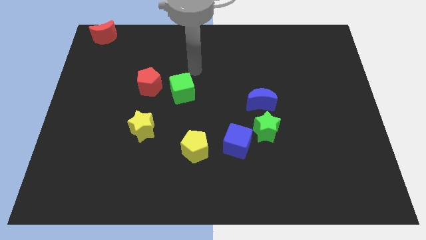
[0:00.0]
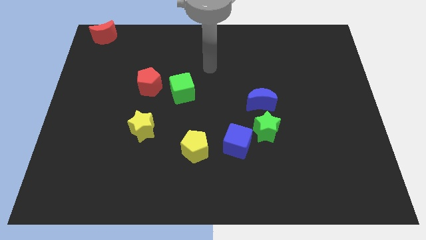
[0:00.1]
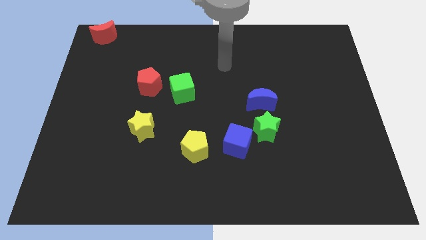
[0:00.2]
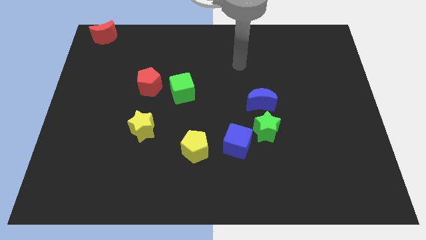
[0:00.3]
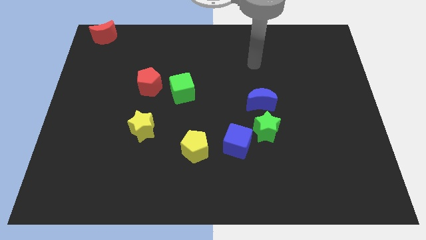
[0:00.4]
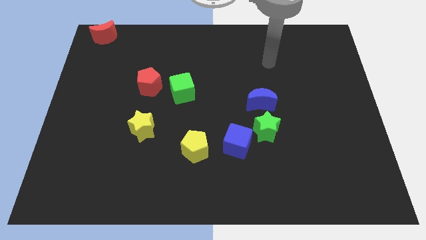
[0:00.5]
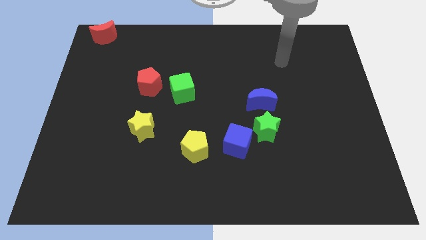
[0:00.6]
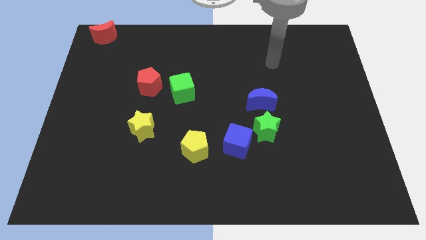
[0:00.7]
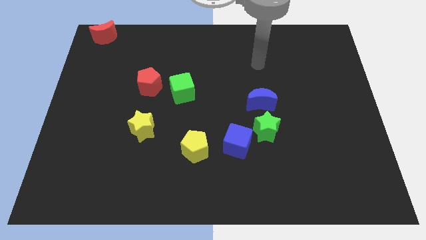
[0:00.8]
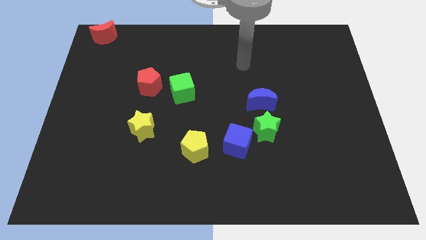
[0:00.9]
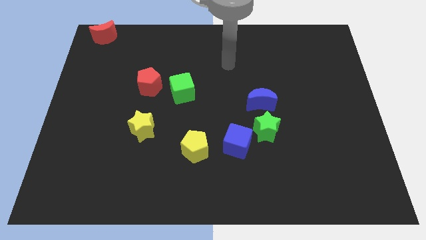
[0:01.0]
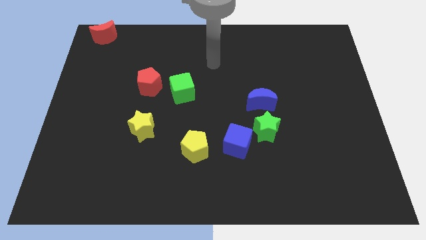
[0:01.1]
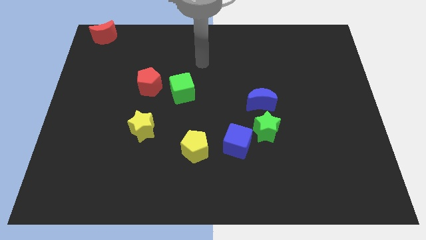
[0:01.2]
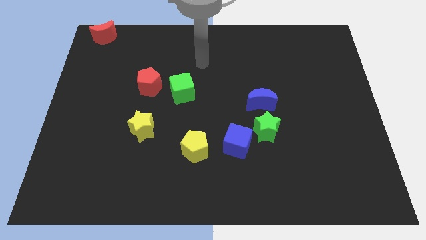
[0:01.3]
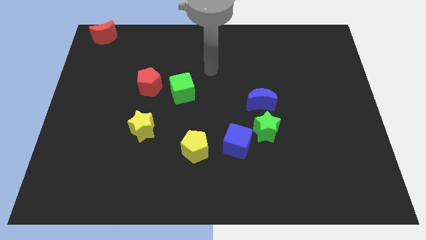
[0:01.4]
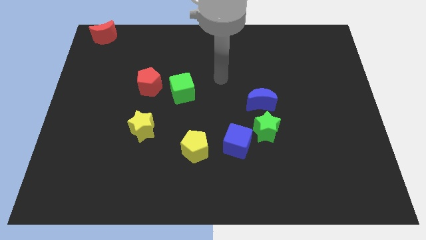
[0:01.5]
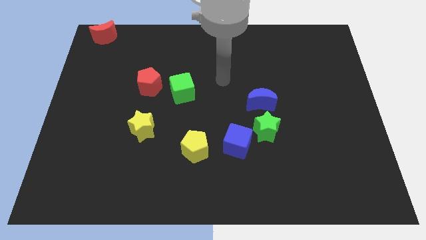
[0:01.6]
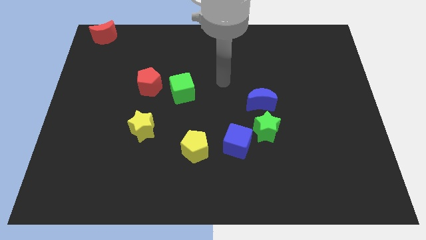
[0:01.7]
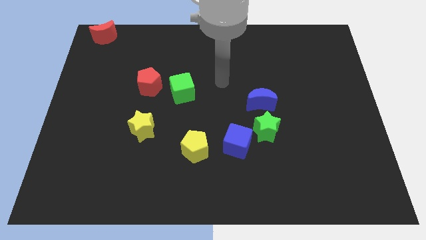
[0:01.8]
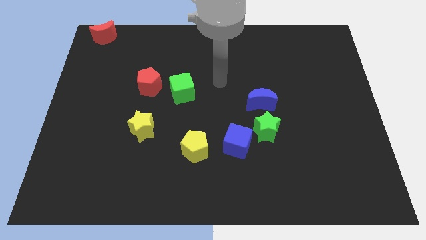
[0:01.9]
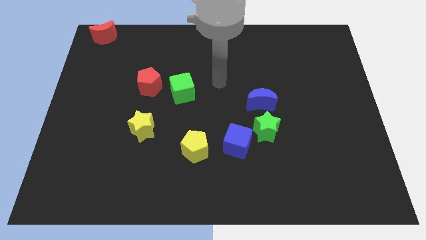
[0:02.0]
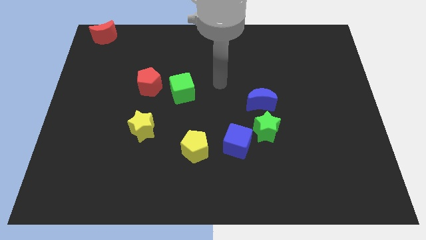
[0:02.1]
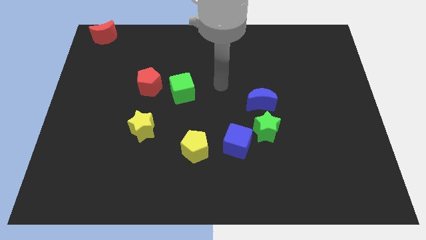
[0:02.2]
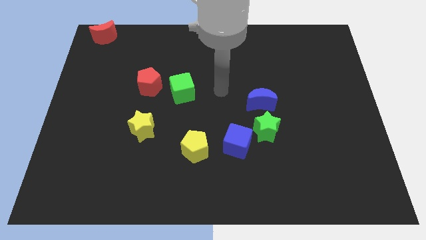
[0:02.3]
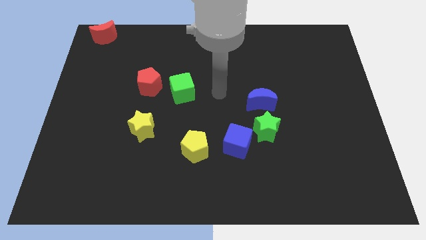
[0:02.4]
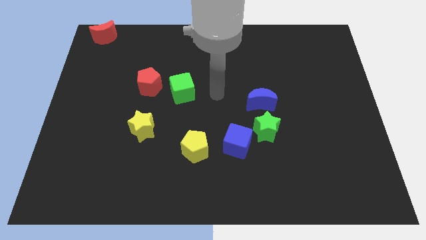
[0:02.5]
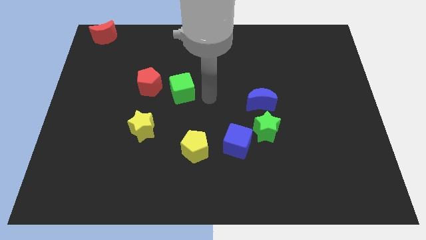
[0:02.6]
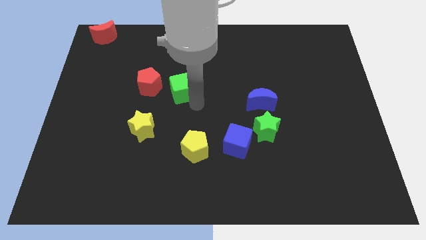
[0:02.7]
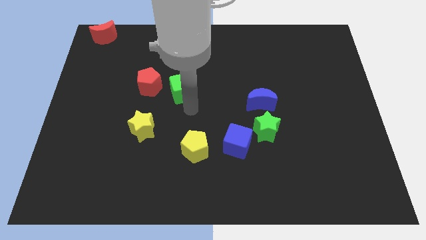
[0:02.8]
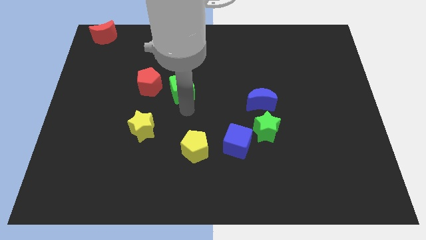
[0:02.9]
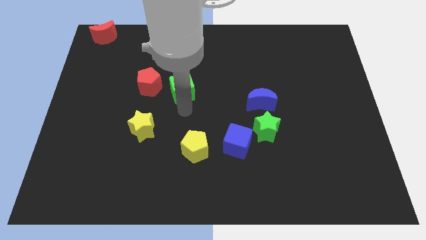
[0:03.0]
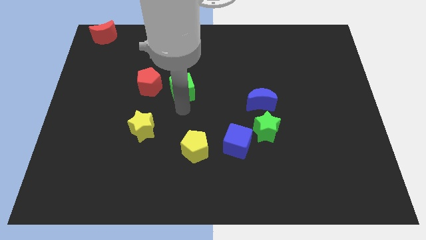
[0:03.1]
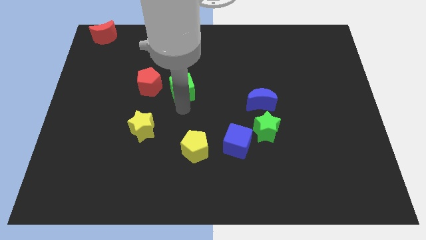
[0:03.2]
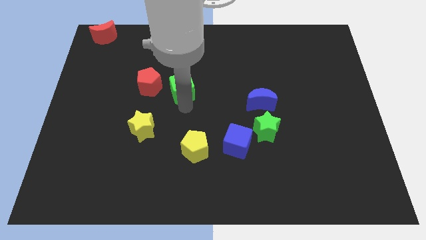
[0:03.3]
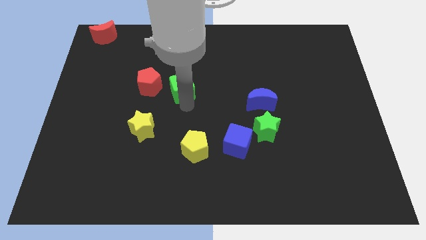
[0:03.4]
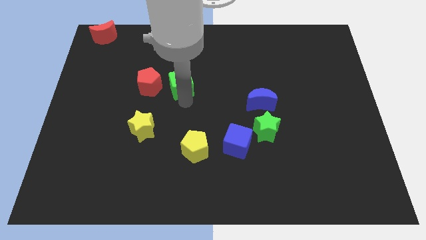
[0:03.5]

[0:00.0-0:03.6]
place arm below green cube

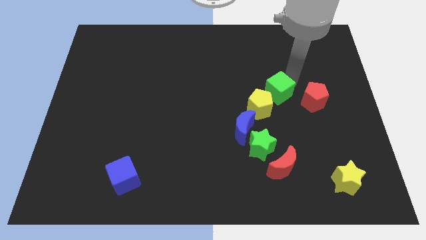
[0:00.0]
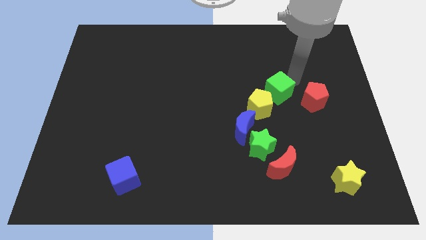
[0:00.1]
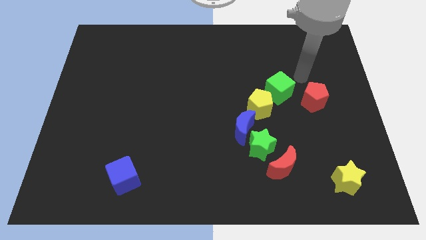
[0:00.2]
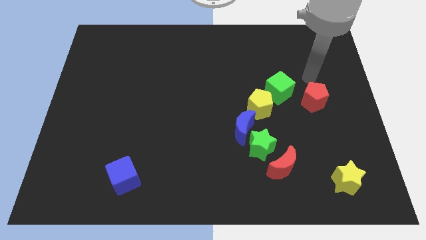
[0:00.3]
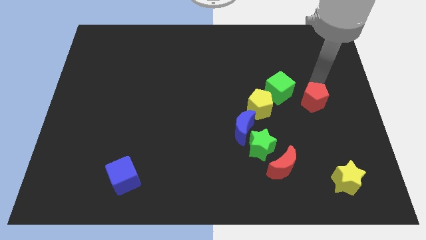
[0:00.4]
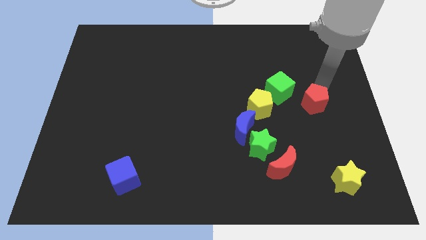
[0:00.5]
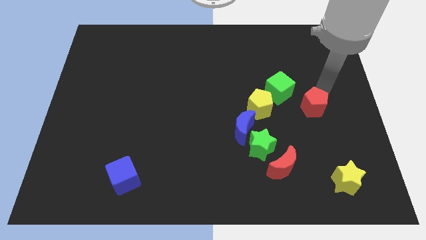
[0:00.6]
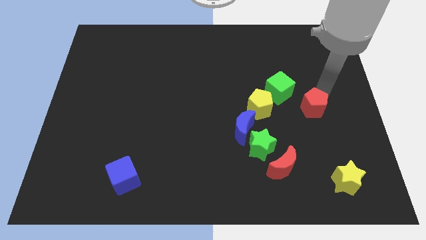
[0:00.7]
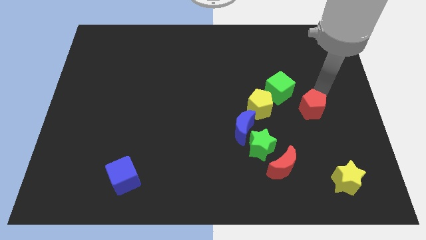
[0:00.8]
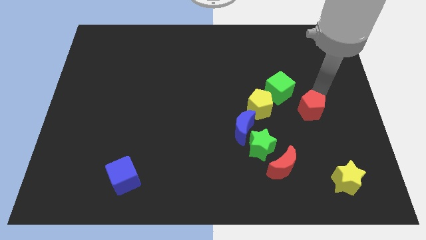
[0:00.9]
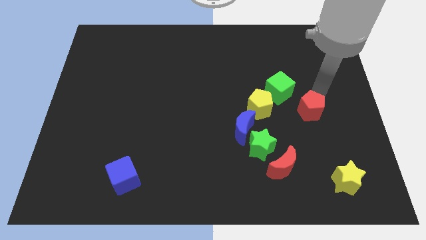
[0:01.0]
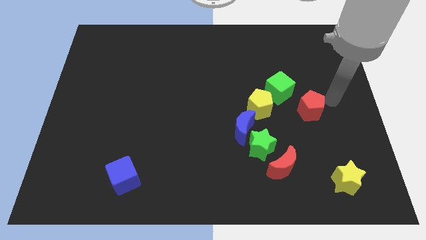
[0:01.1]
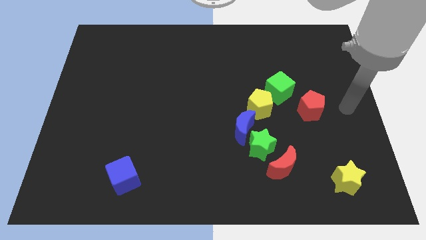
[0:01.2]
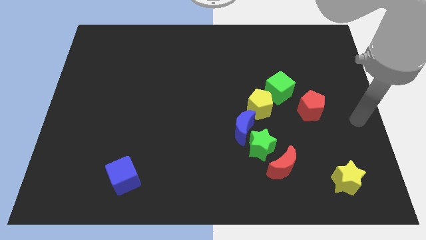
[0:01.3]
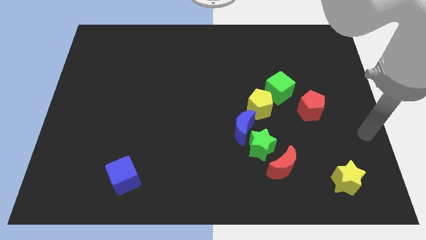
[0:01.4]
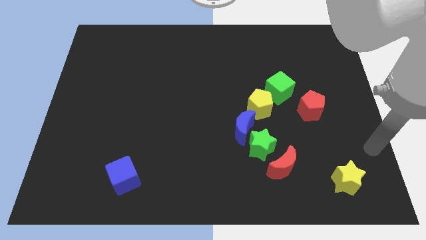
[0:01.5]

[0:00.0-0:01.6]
slightly push the red pentagon towards green cube

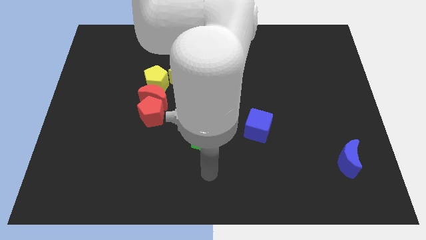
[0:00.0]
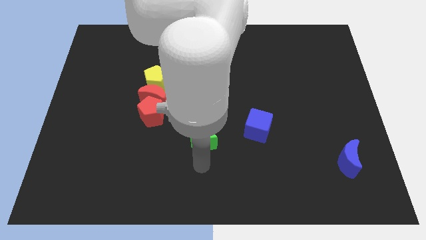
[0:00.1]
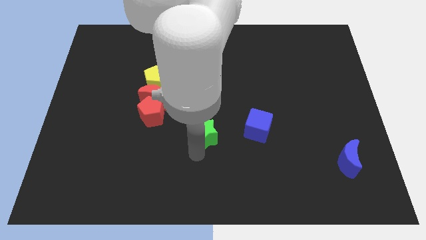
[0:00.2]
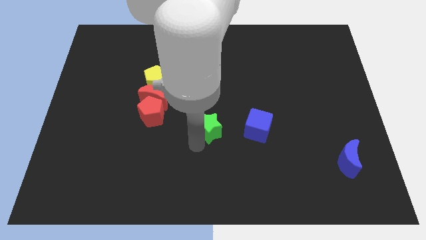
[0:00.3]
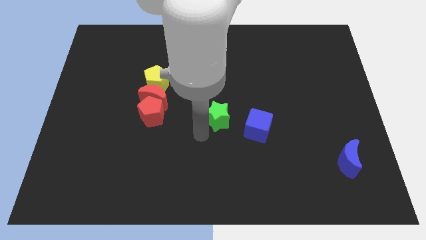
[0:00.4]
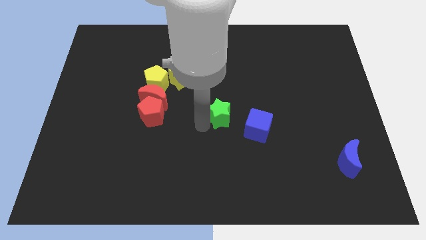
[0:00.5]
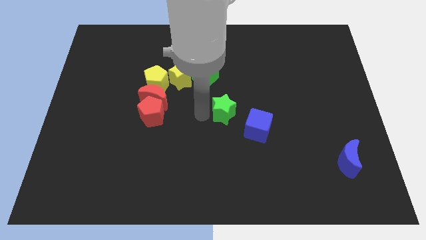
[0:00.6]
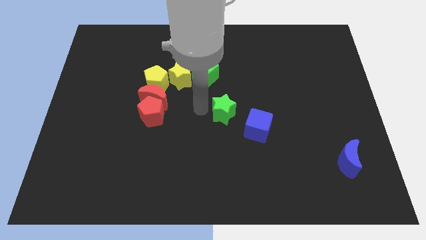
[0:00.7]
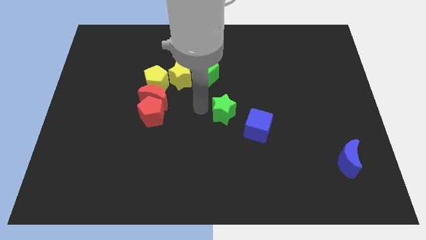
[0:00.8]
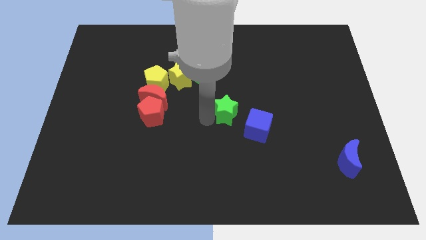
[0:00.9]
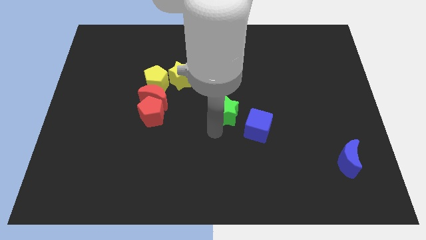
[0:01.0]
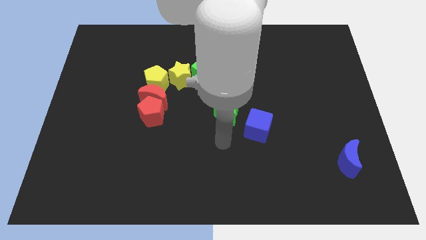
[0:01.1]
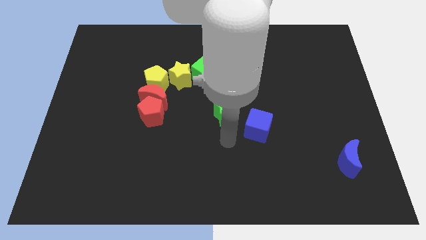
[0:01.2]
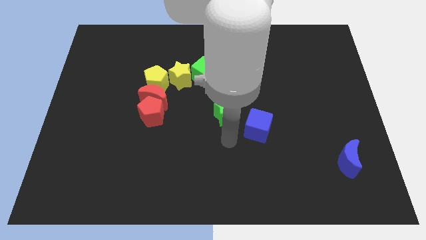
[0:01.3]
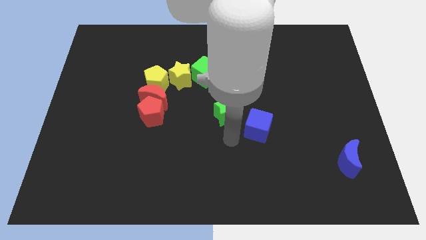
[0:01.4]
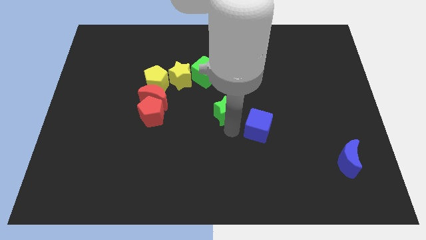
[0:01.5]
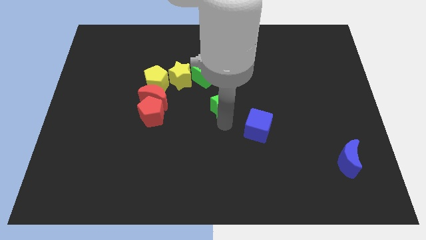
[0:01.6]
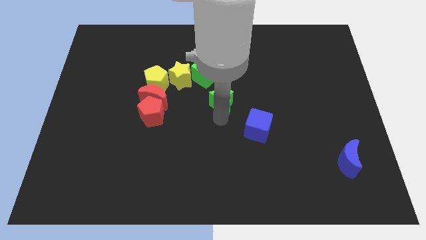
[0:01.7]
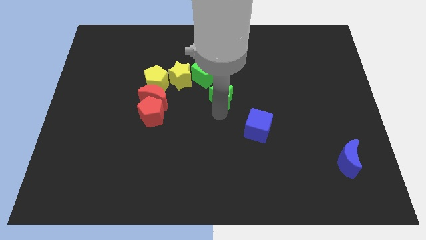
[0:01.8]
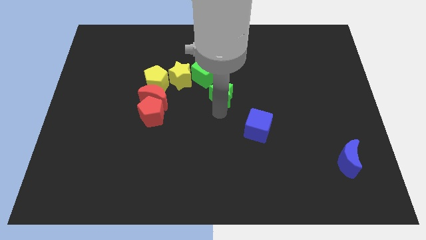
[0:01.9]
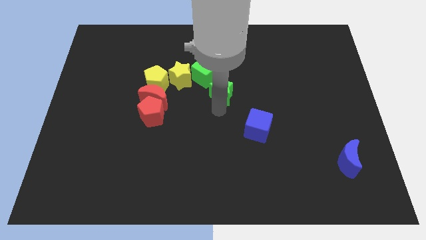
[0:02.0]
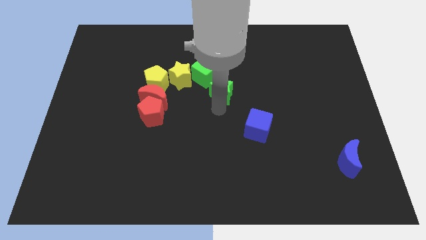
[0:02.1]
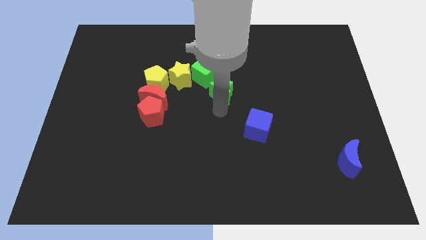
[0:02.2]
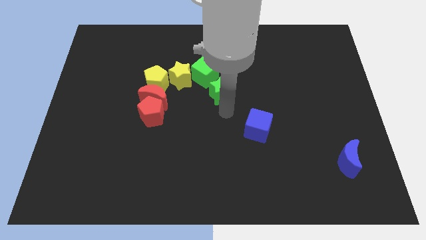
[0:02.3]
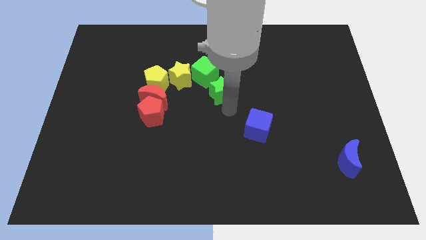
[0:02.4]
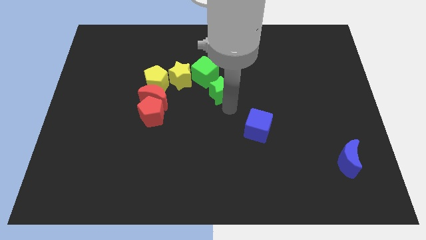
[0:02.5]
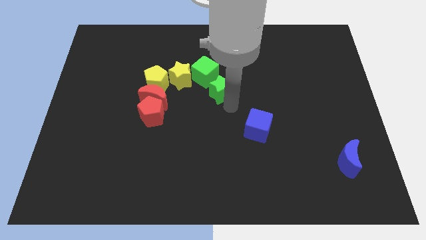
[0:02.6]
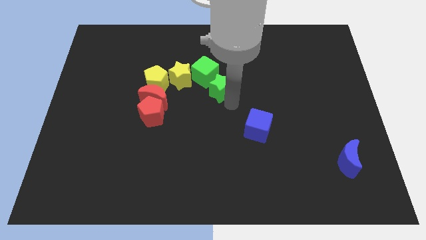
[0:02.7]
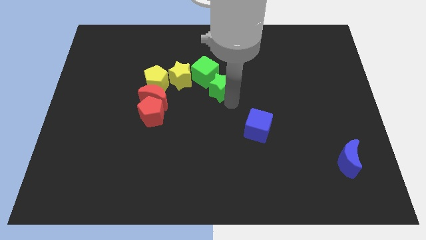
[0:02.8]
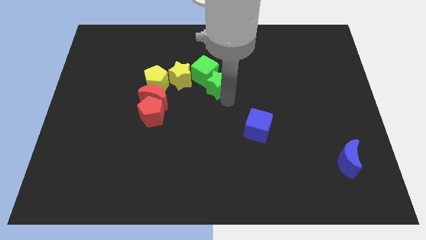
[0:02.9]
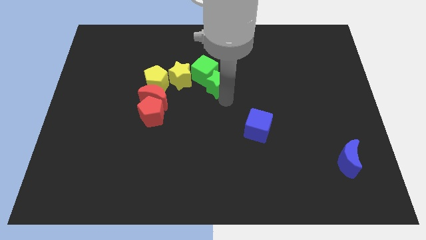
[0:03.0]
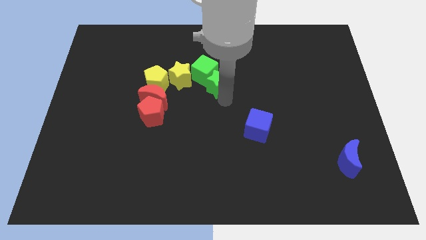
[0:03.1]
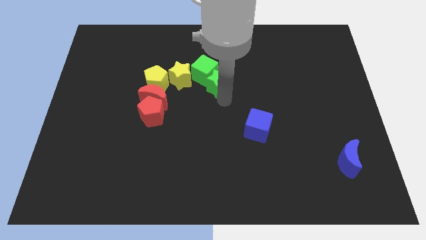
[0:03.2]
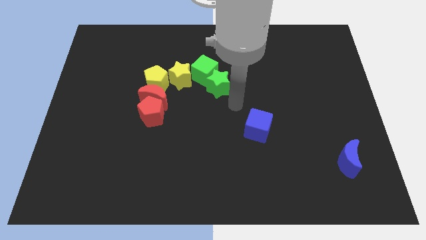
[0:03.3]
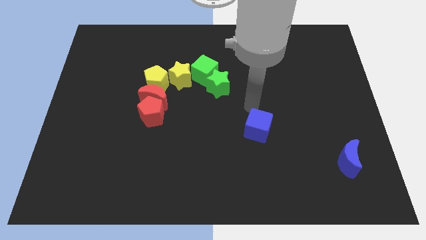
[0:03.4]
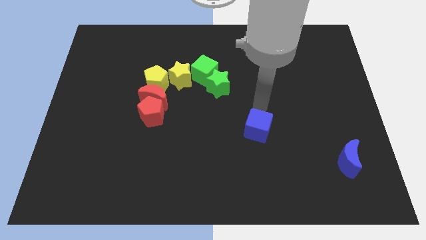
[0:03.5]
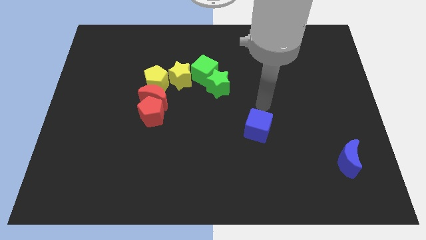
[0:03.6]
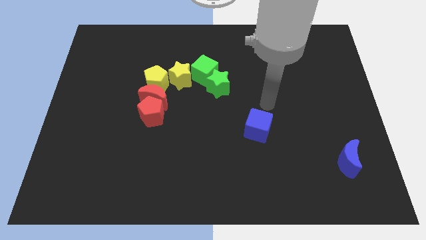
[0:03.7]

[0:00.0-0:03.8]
move the green star into the green cube towards the top center

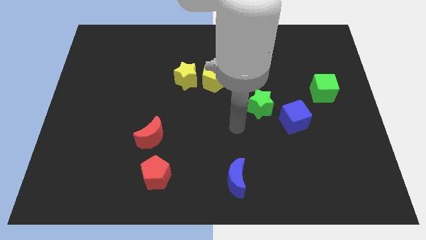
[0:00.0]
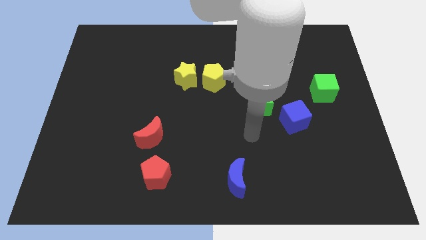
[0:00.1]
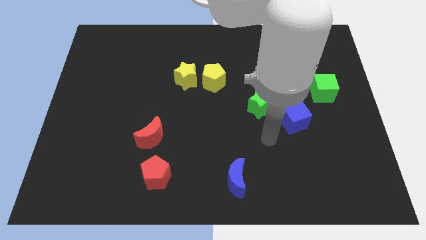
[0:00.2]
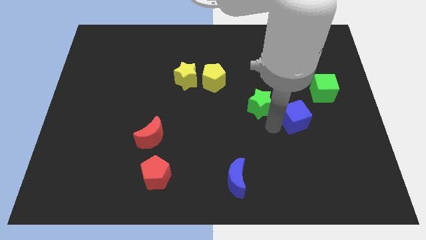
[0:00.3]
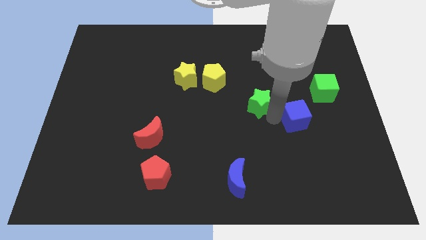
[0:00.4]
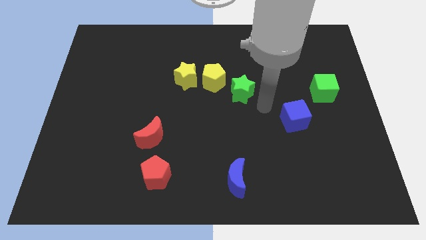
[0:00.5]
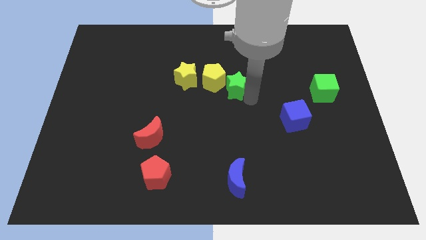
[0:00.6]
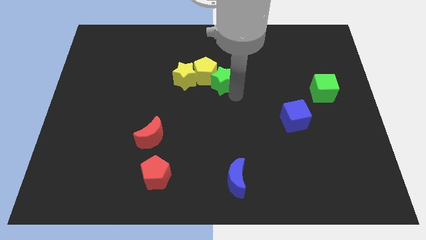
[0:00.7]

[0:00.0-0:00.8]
push the green star to the right of the yellow pentagon
